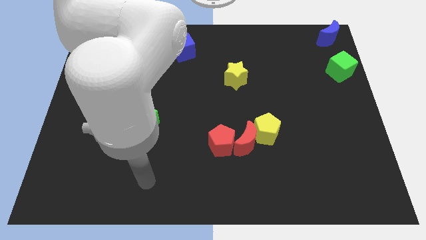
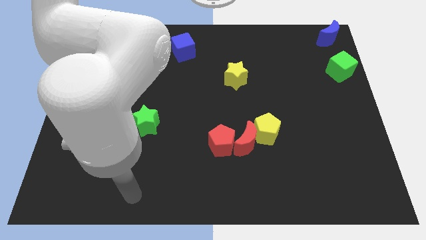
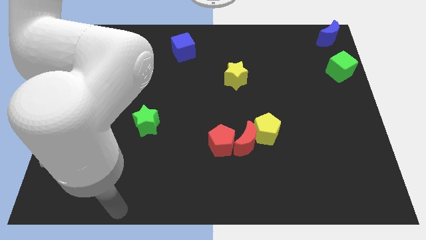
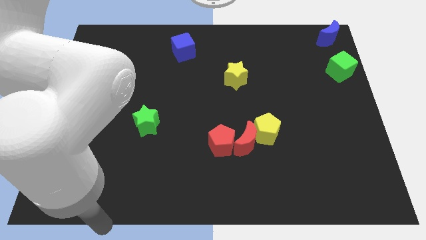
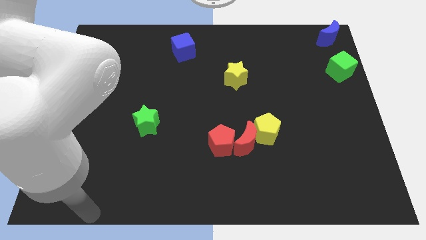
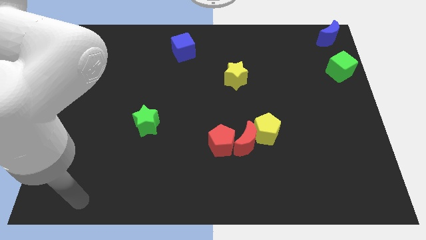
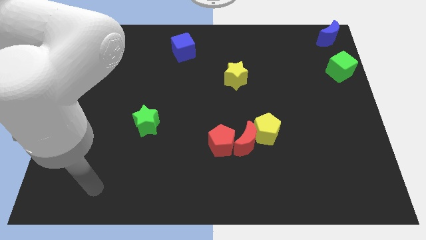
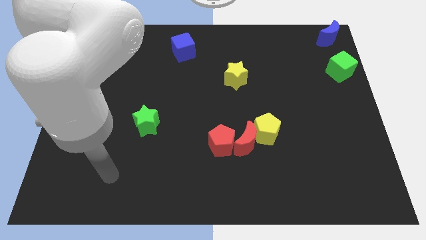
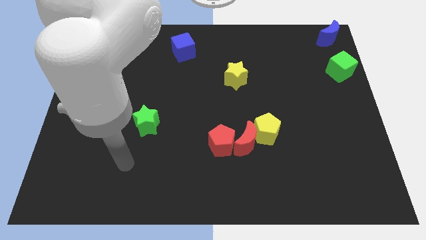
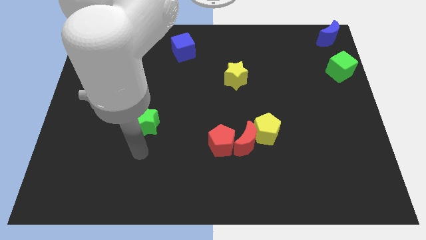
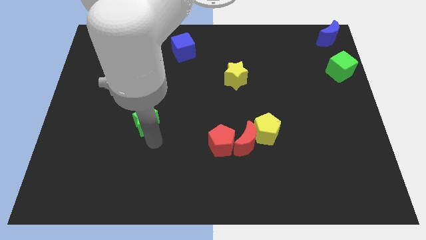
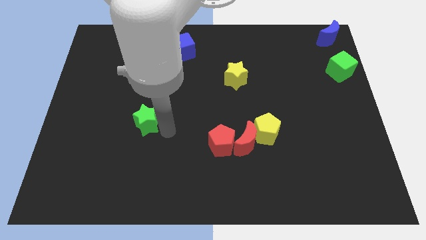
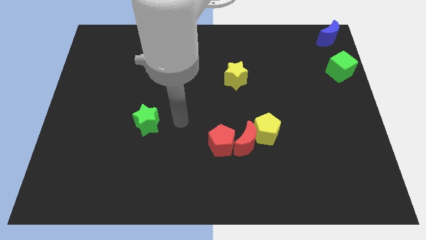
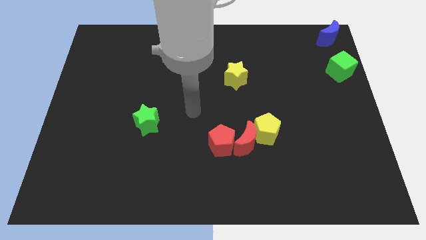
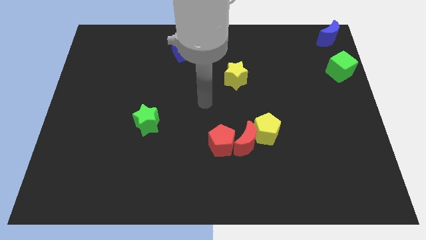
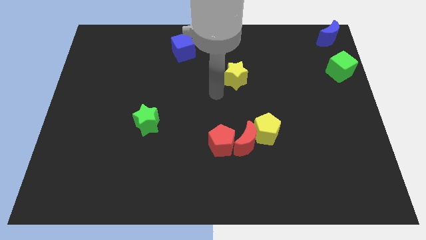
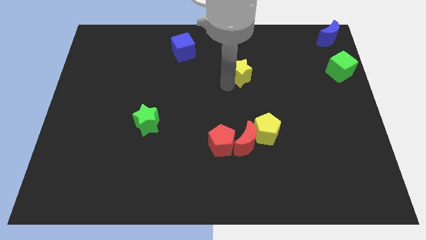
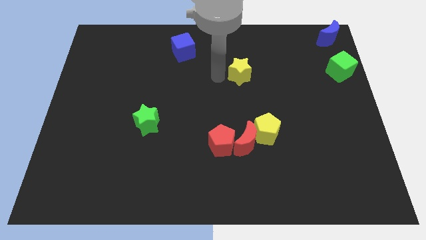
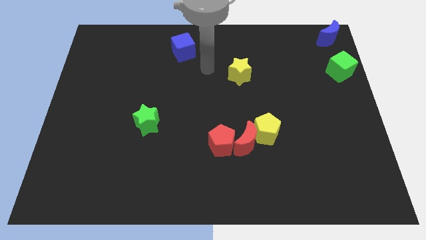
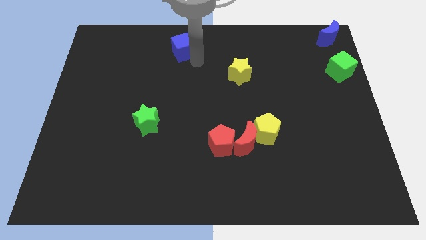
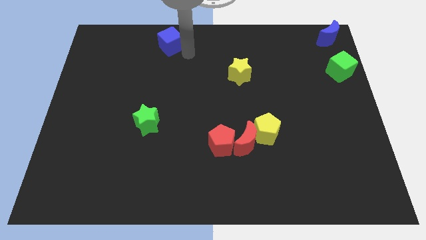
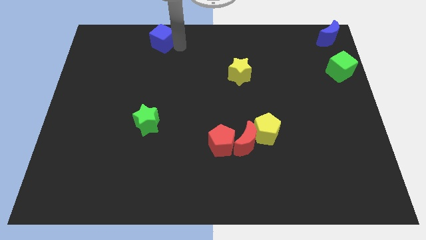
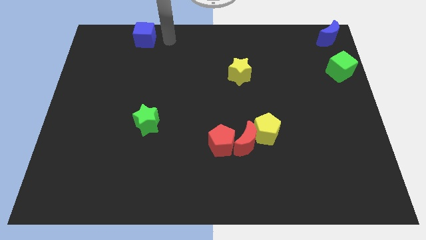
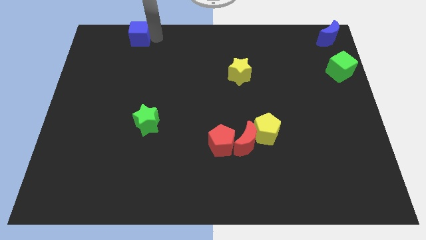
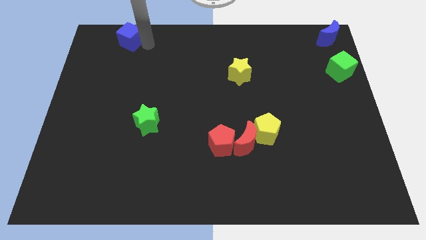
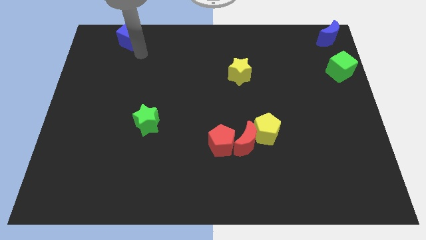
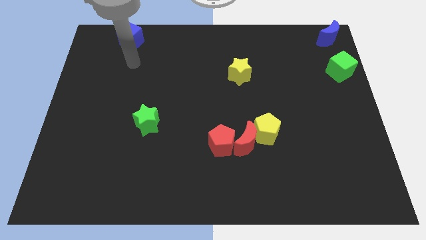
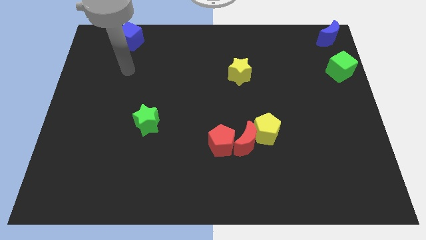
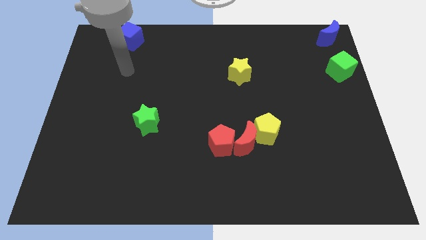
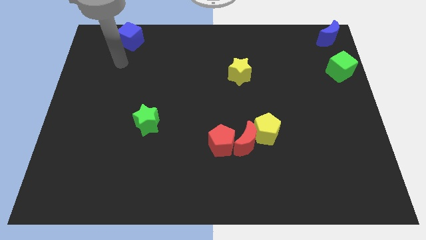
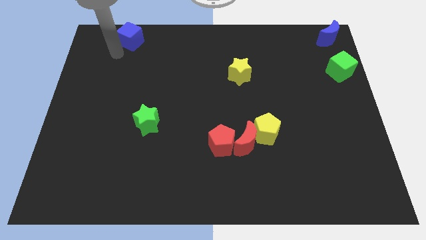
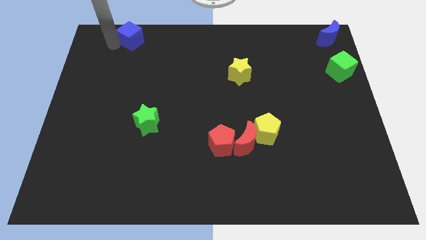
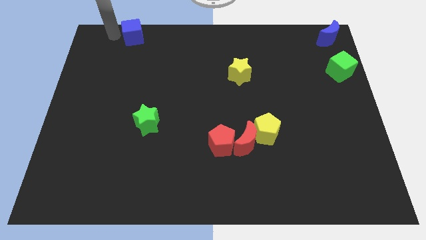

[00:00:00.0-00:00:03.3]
place the blue cube vertically above the green star

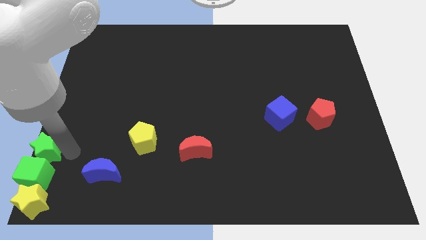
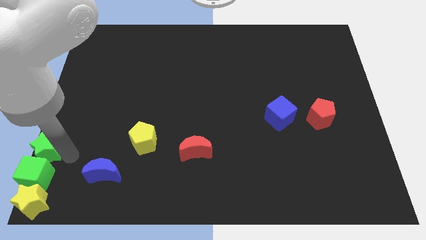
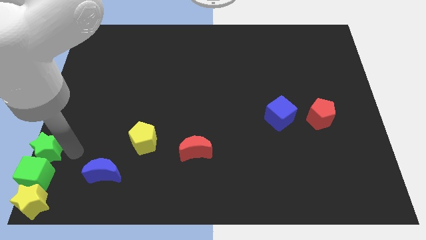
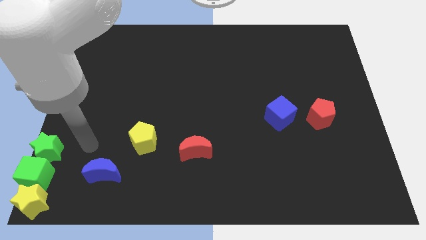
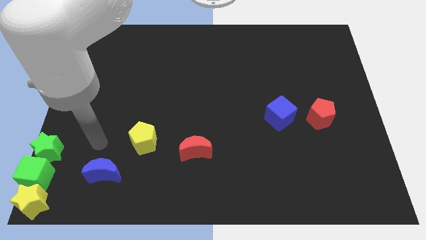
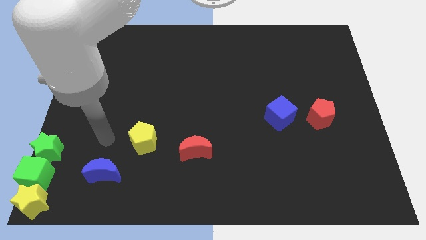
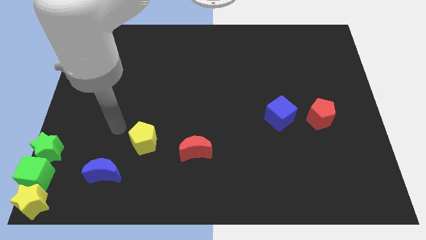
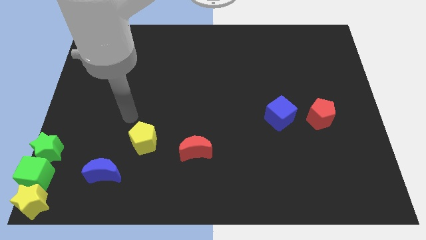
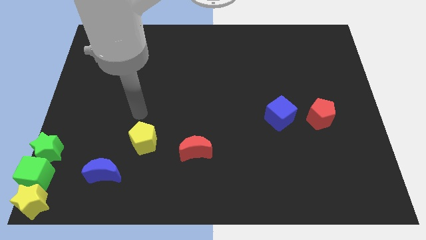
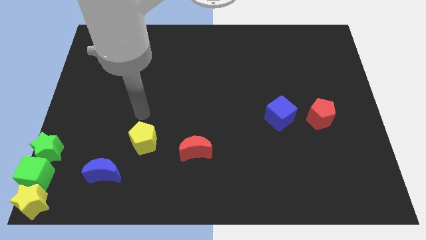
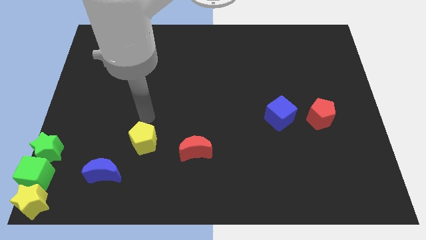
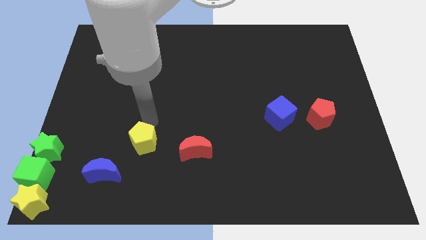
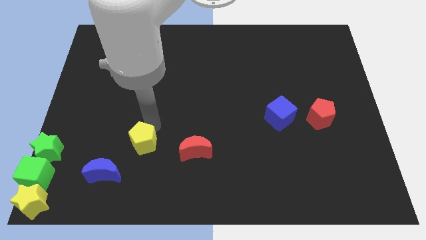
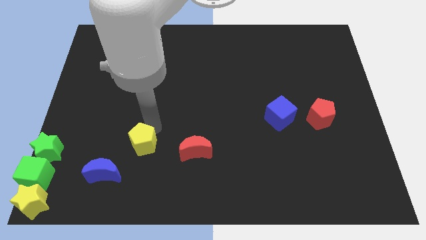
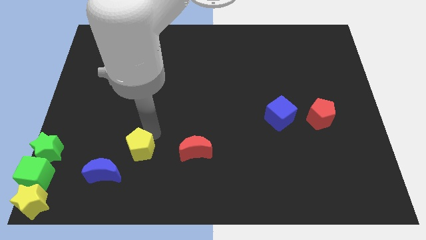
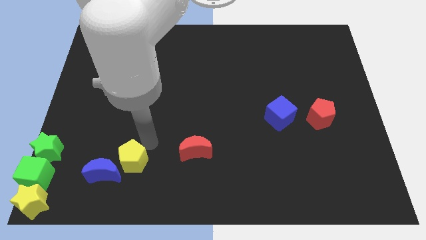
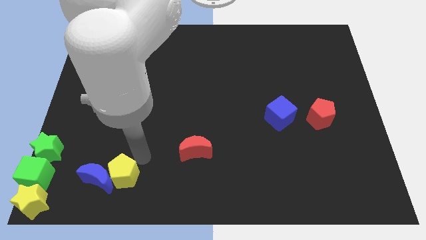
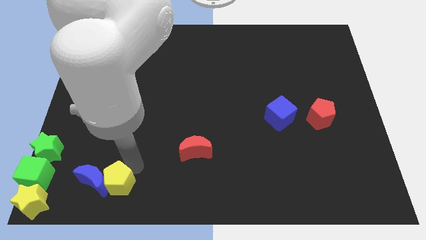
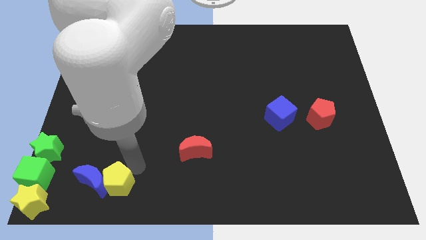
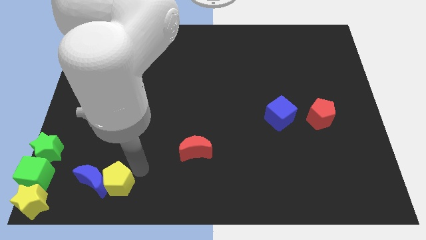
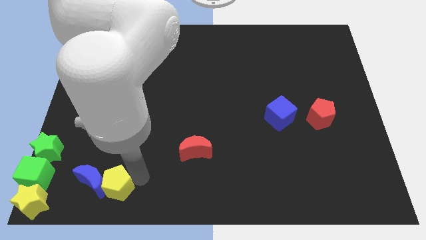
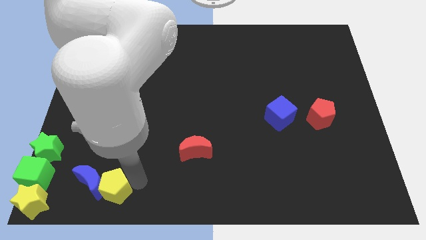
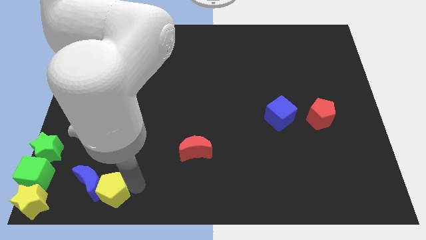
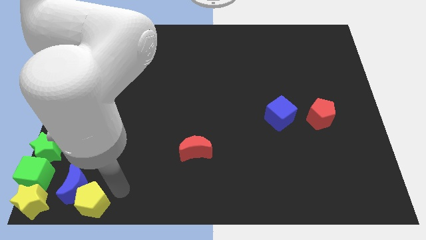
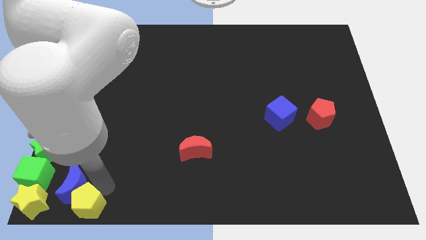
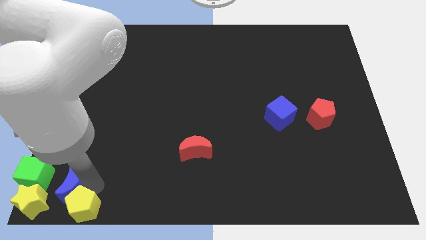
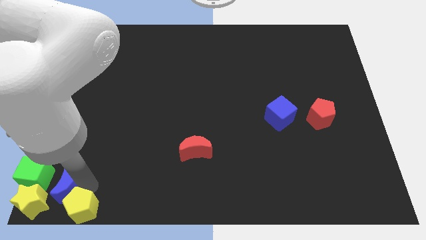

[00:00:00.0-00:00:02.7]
push the blue moon with yellow pentagon

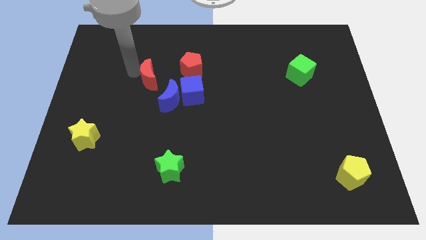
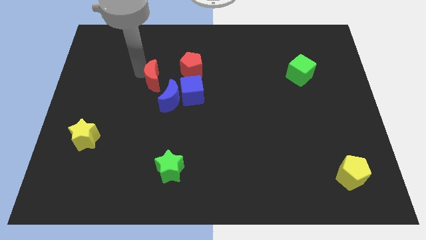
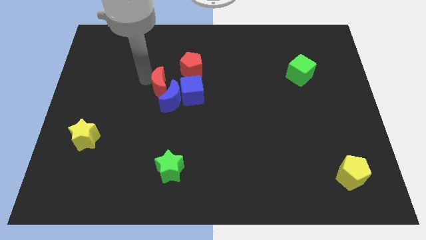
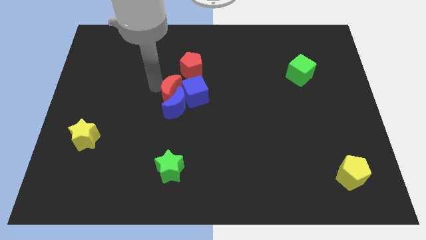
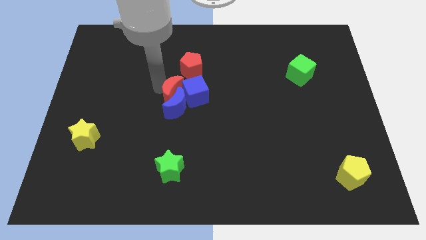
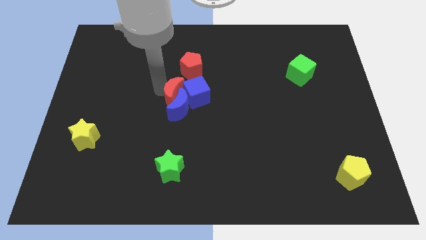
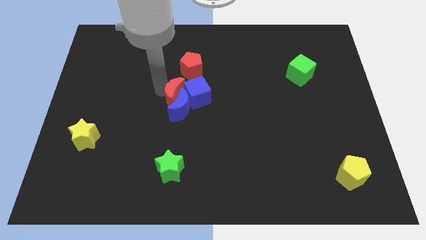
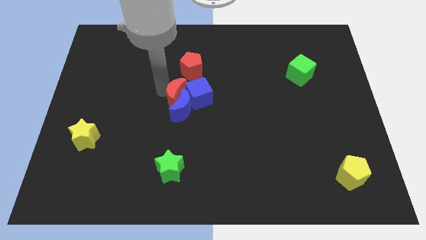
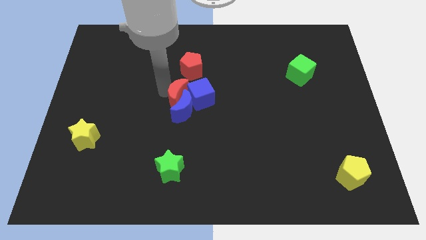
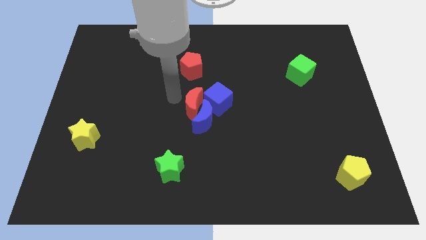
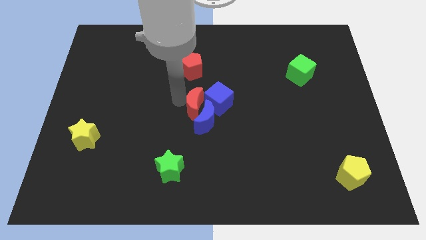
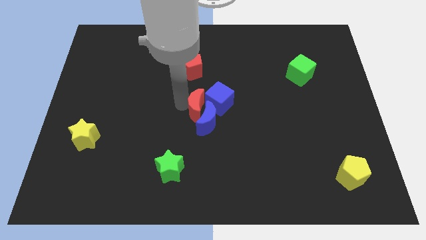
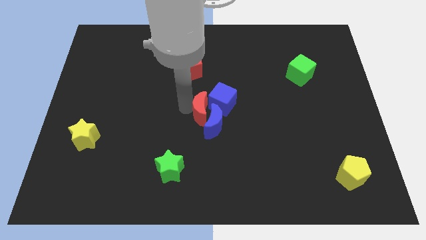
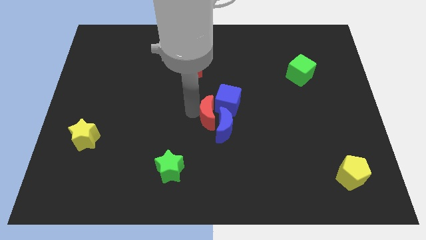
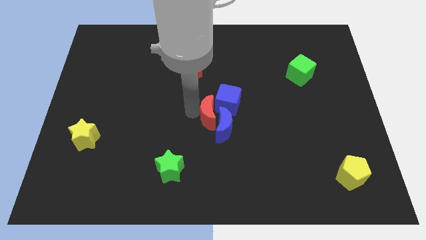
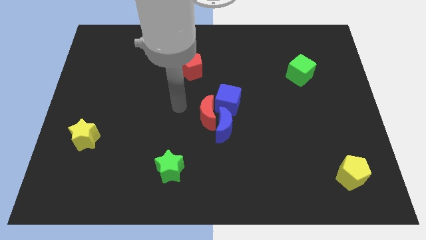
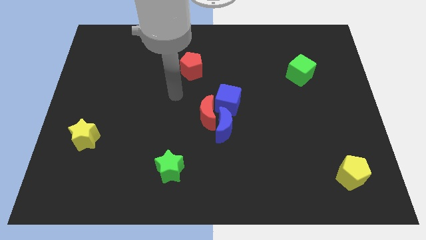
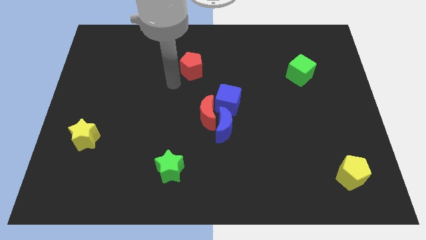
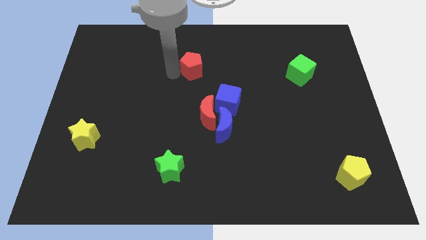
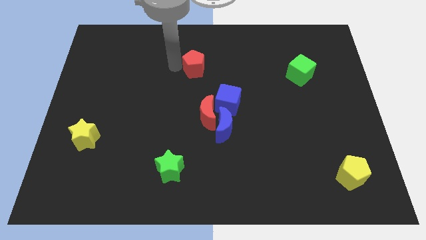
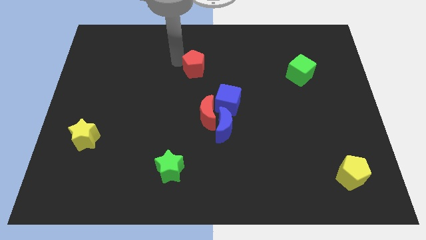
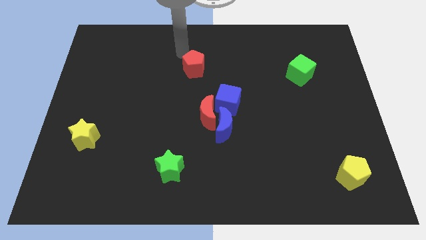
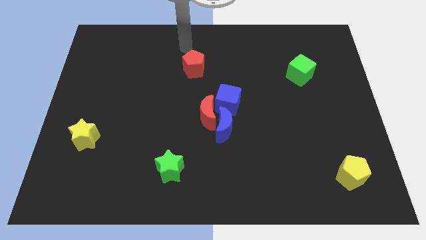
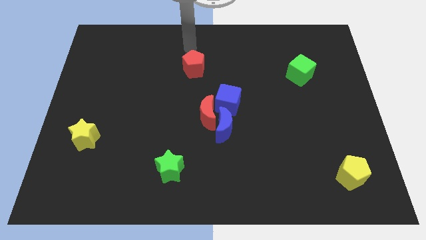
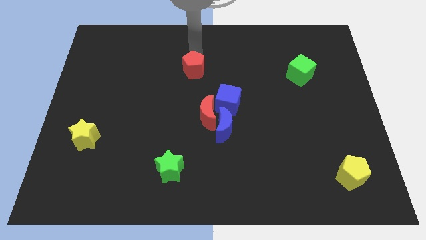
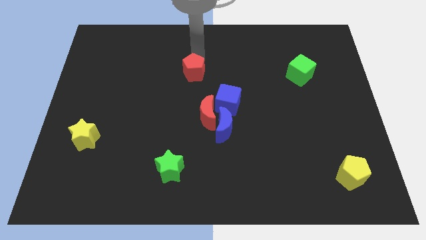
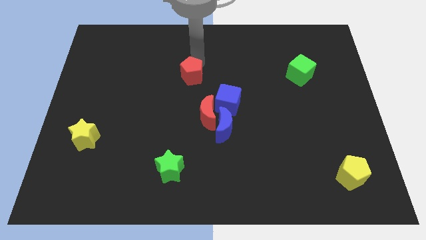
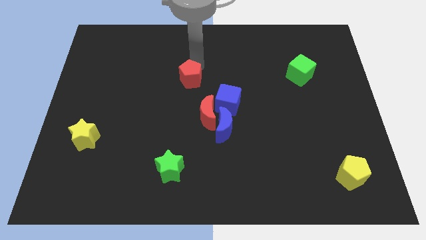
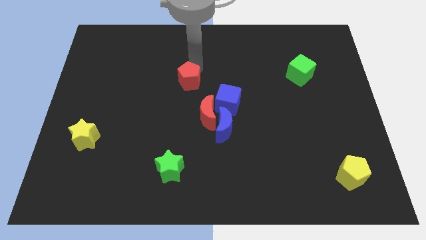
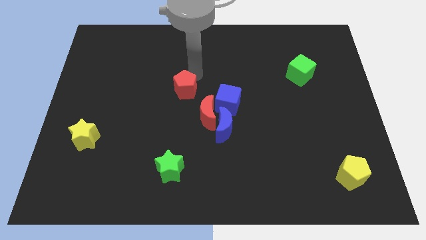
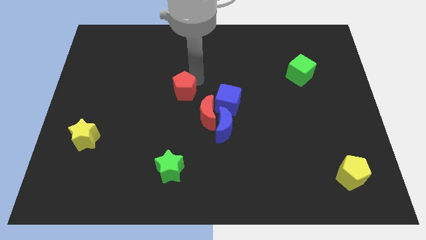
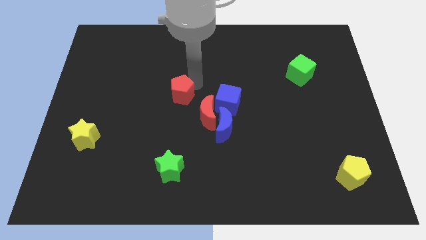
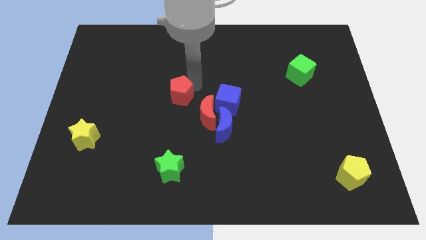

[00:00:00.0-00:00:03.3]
push red and blue blocks towards the bottom side of the board
